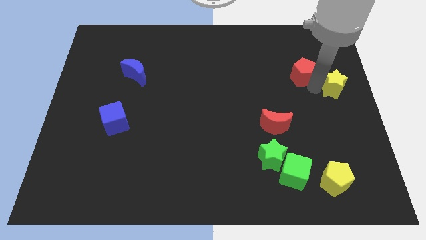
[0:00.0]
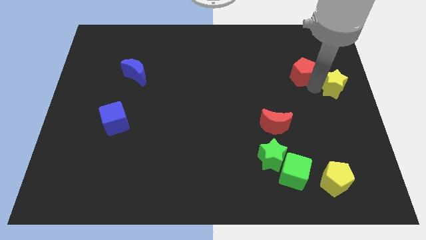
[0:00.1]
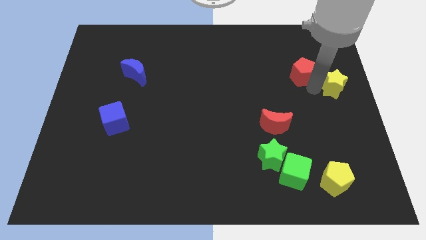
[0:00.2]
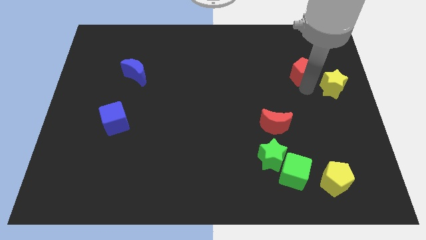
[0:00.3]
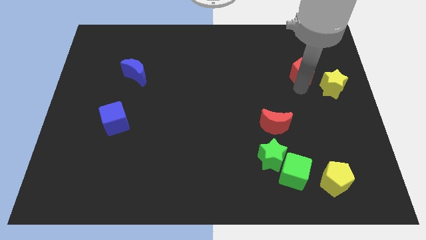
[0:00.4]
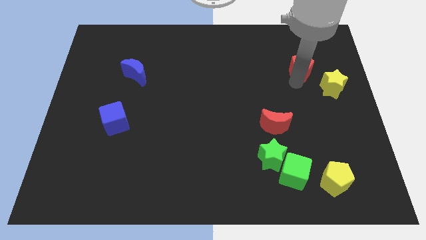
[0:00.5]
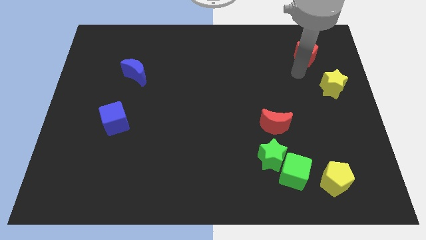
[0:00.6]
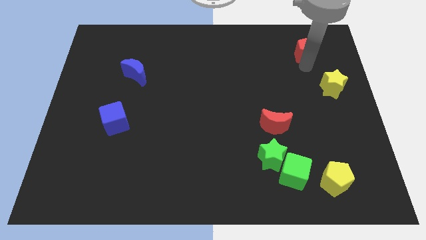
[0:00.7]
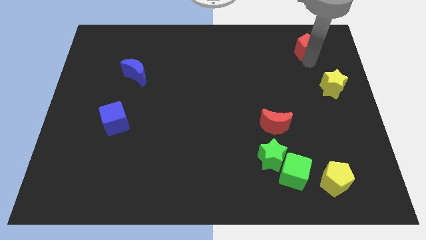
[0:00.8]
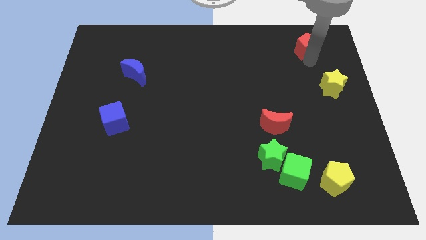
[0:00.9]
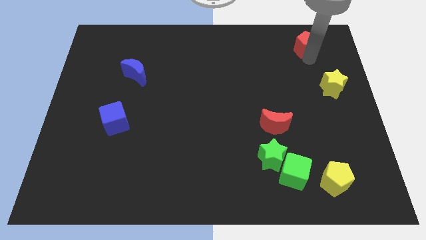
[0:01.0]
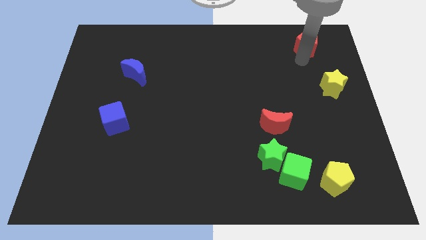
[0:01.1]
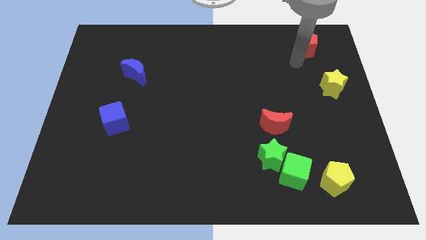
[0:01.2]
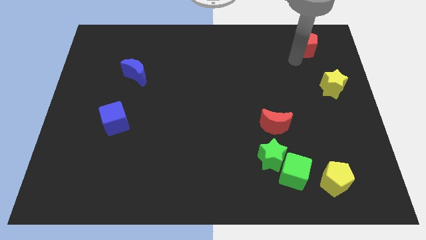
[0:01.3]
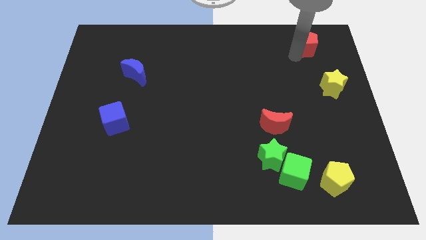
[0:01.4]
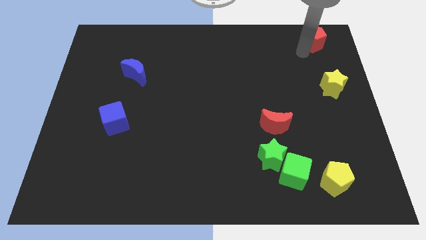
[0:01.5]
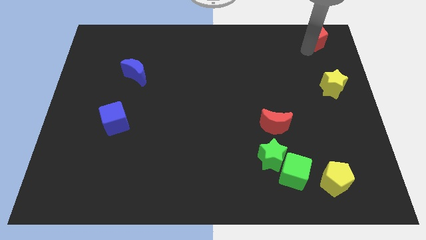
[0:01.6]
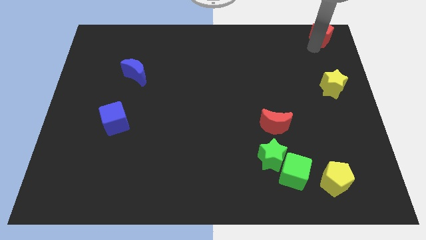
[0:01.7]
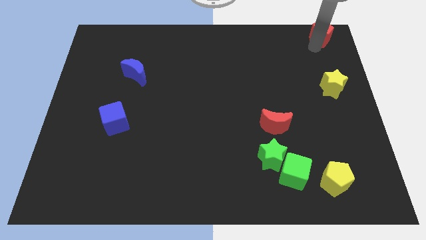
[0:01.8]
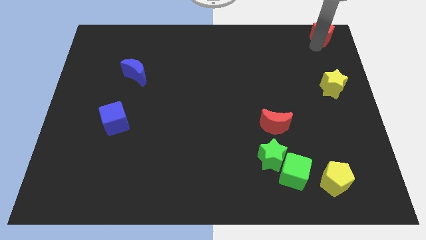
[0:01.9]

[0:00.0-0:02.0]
move red pentagon to the top of the yellow star

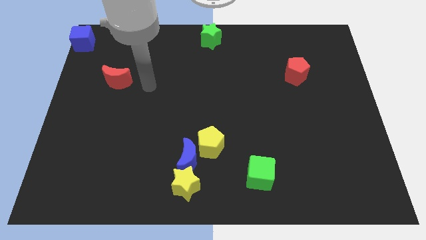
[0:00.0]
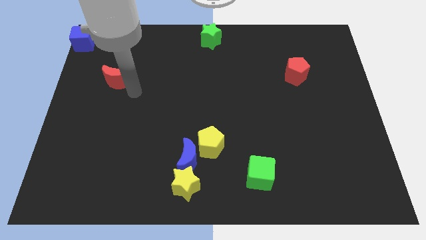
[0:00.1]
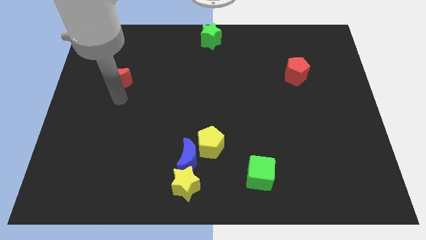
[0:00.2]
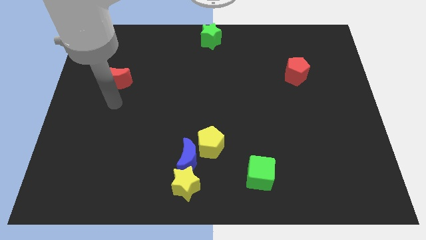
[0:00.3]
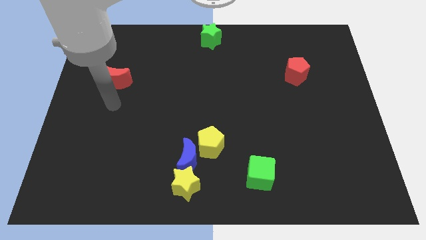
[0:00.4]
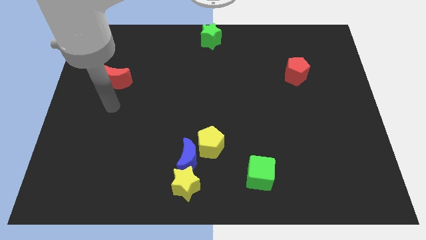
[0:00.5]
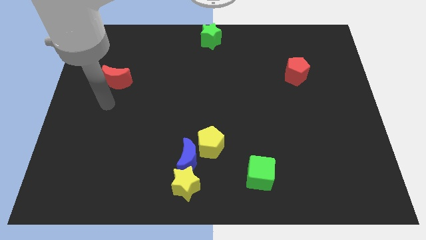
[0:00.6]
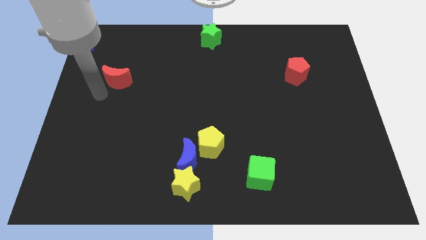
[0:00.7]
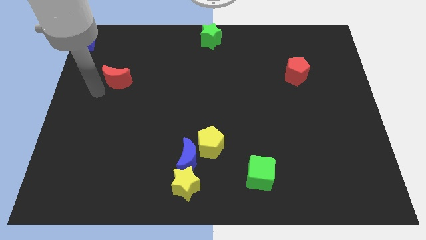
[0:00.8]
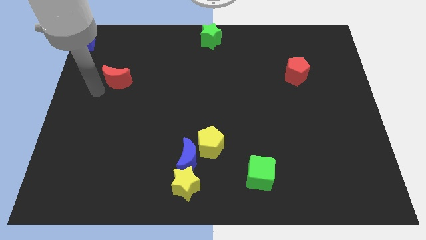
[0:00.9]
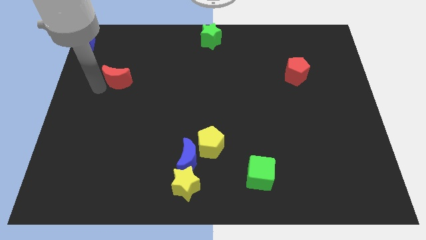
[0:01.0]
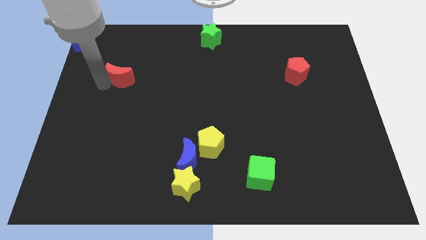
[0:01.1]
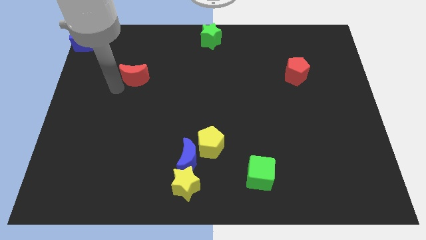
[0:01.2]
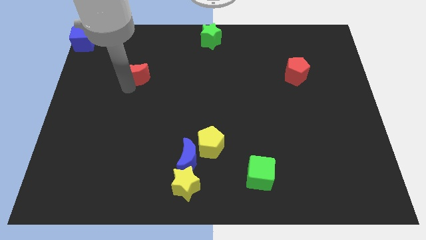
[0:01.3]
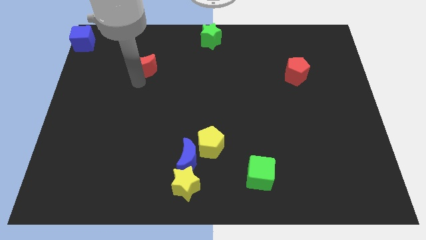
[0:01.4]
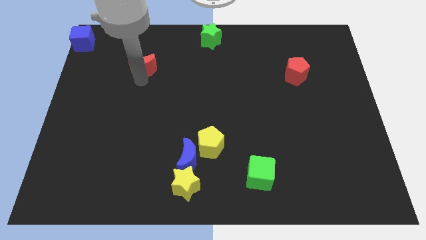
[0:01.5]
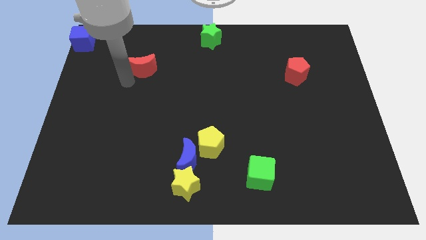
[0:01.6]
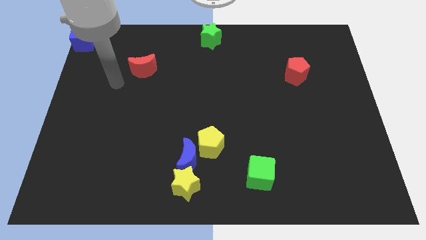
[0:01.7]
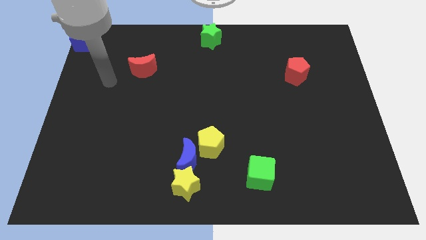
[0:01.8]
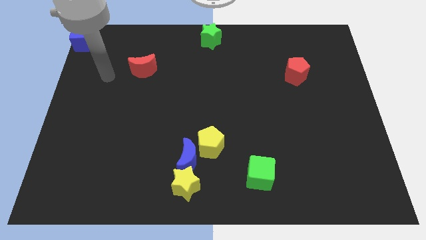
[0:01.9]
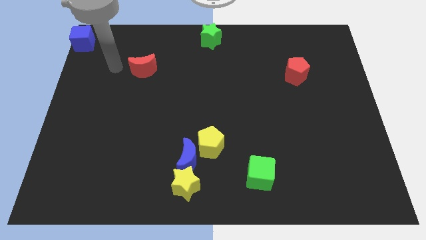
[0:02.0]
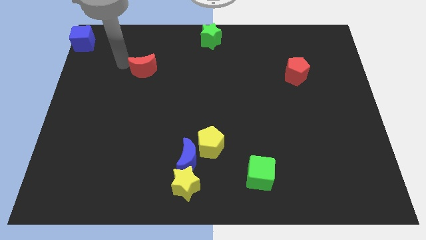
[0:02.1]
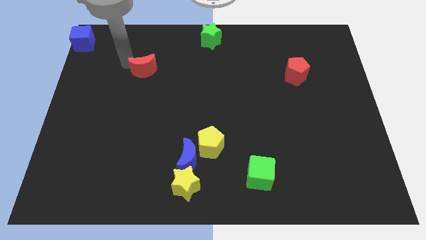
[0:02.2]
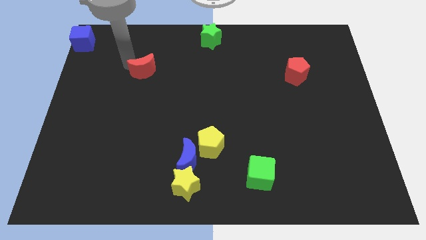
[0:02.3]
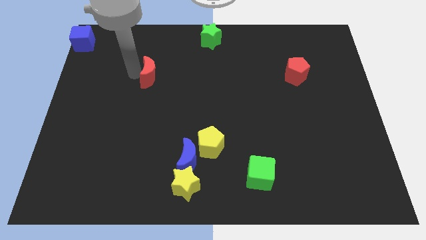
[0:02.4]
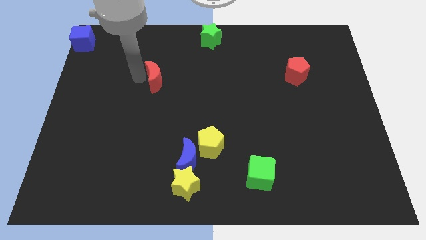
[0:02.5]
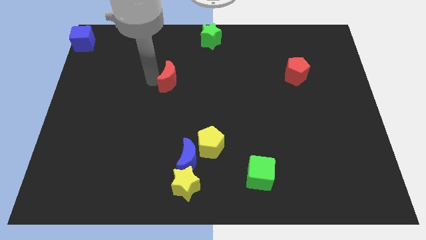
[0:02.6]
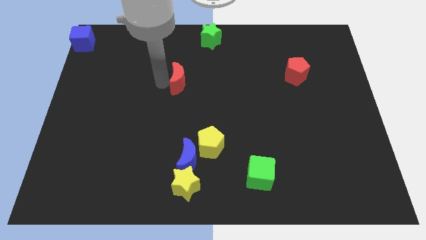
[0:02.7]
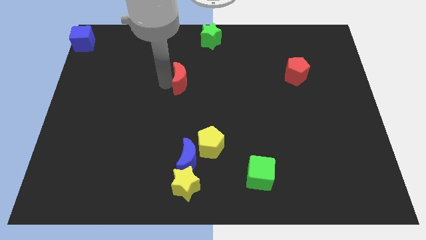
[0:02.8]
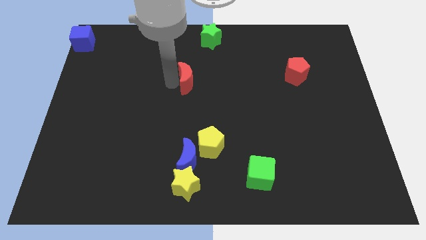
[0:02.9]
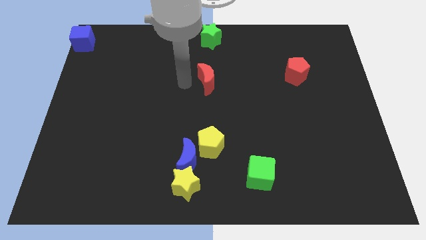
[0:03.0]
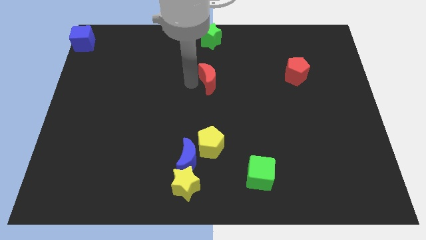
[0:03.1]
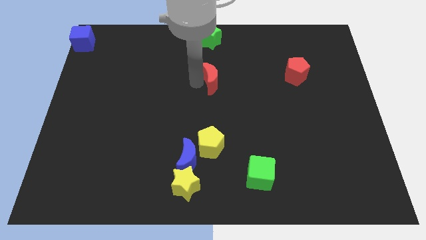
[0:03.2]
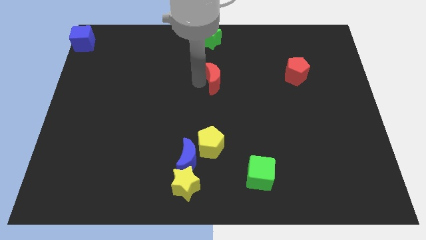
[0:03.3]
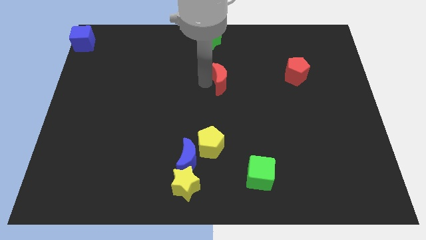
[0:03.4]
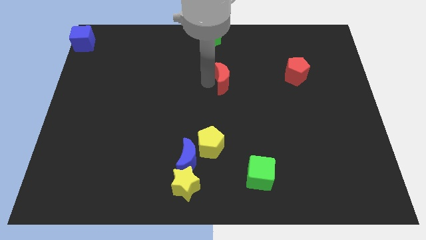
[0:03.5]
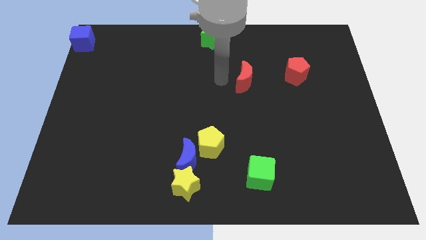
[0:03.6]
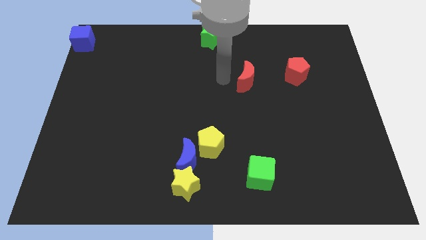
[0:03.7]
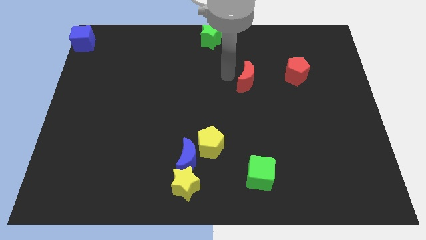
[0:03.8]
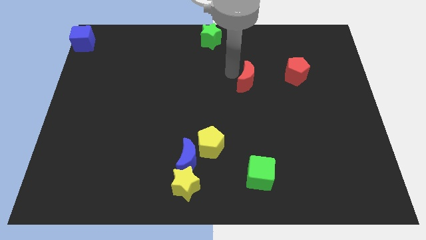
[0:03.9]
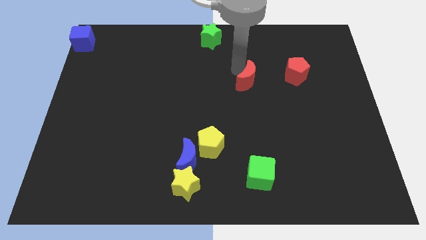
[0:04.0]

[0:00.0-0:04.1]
slide the red crescent towards the red pentagon

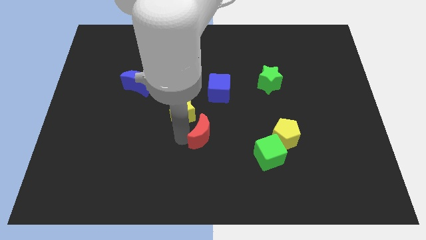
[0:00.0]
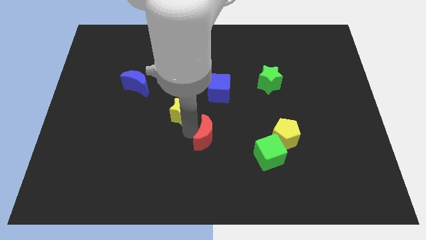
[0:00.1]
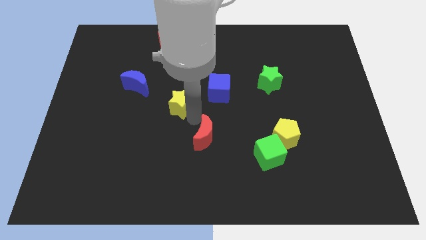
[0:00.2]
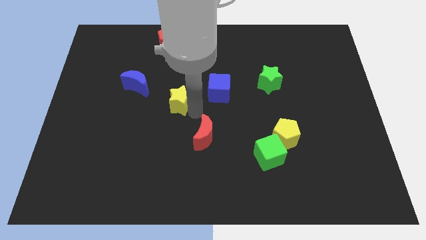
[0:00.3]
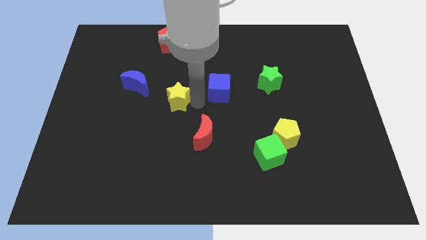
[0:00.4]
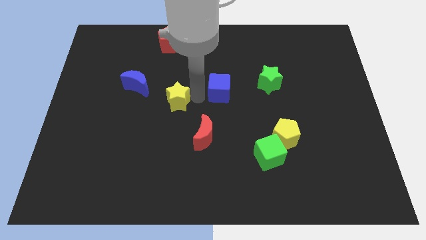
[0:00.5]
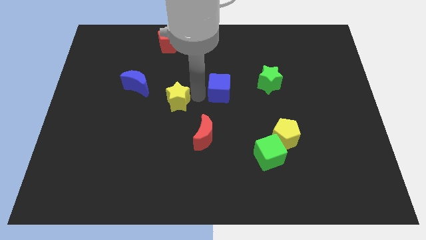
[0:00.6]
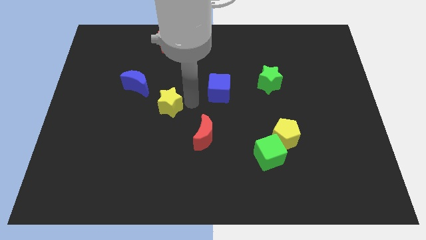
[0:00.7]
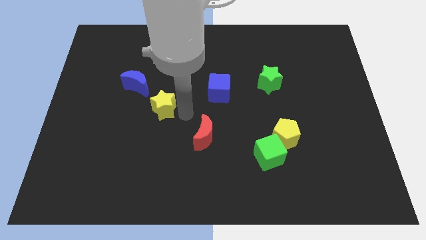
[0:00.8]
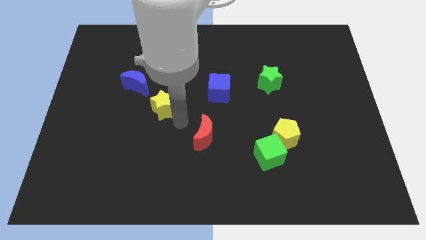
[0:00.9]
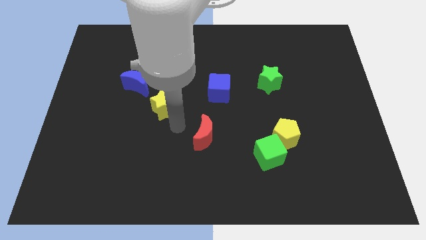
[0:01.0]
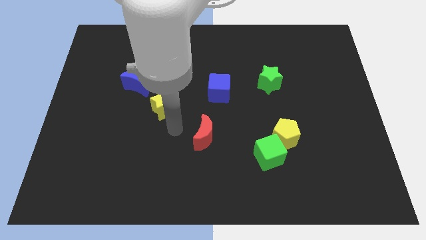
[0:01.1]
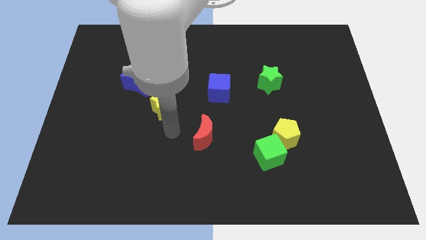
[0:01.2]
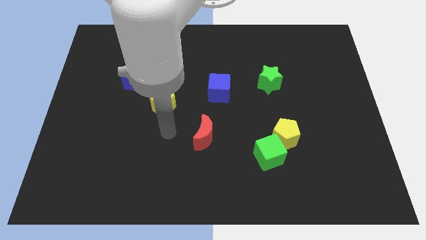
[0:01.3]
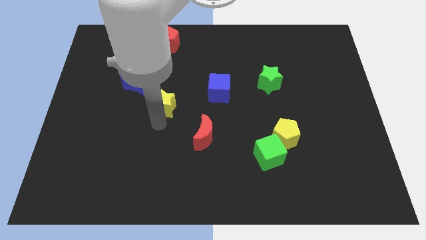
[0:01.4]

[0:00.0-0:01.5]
separate the yellow block from the red moon

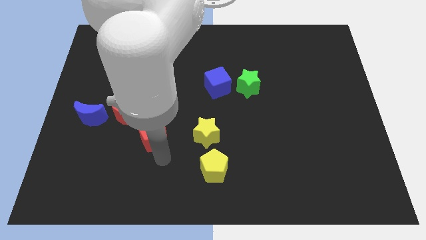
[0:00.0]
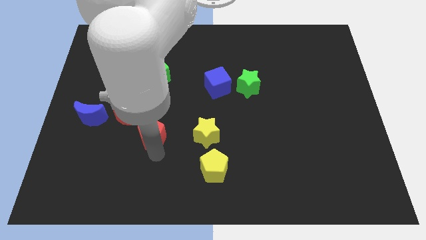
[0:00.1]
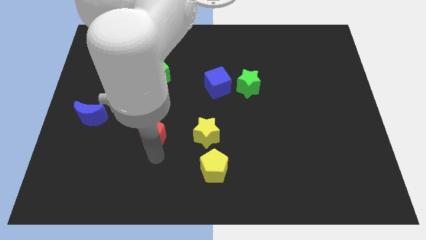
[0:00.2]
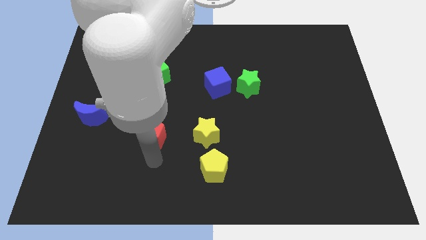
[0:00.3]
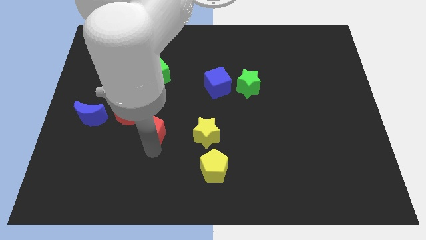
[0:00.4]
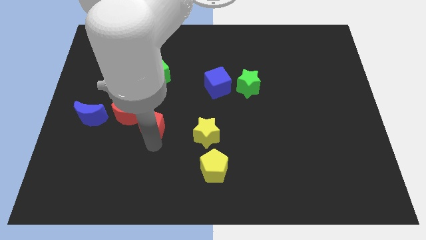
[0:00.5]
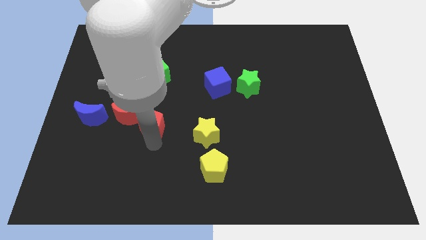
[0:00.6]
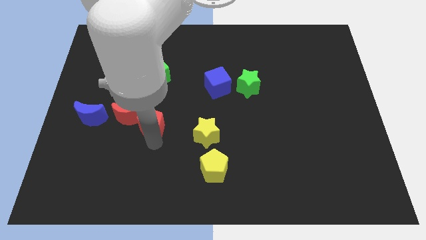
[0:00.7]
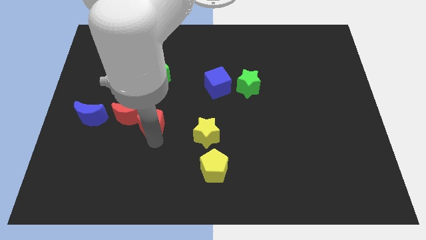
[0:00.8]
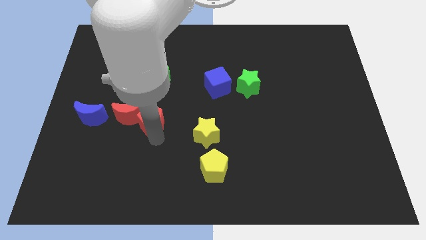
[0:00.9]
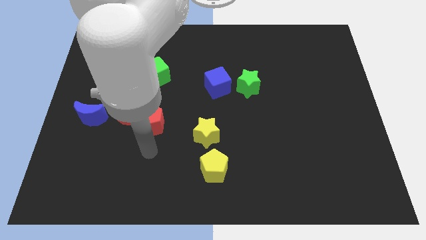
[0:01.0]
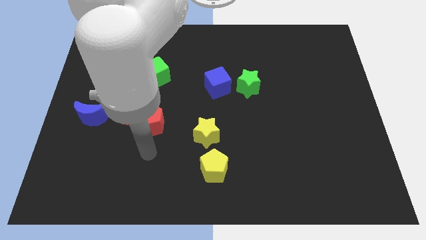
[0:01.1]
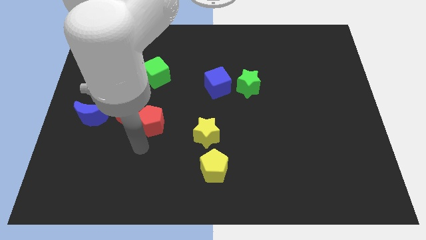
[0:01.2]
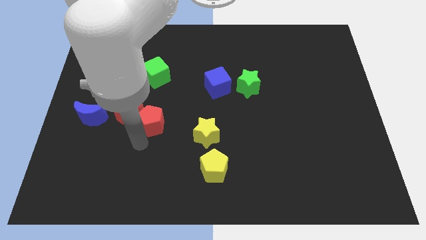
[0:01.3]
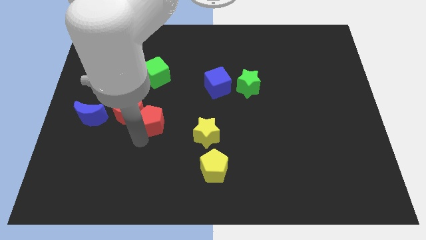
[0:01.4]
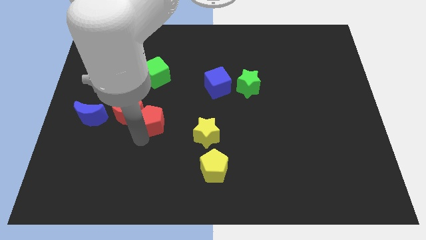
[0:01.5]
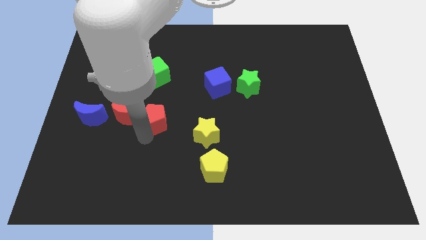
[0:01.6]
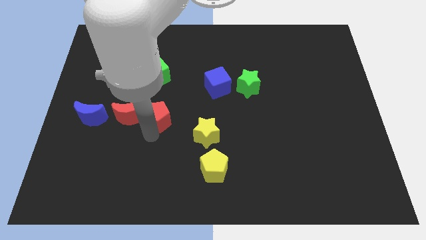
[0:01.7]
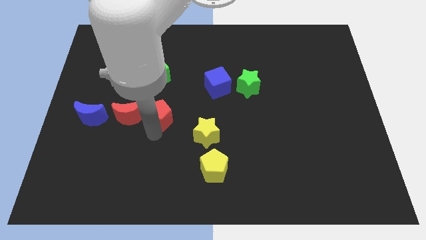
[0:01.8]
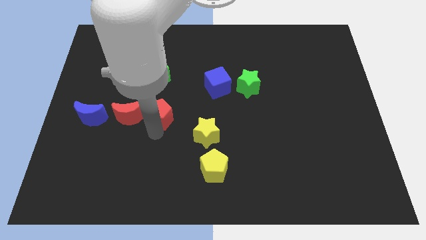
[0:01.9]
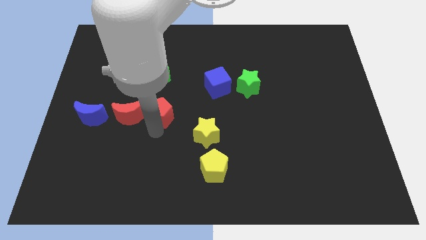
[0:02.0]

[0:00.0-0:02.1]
move red pentagon into red moon
